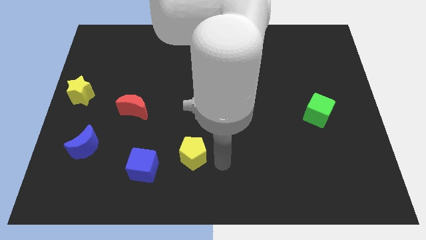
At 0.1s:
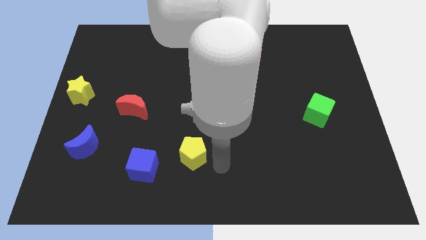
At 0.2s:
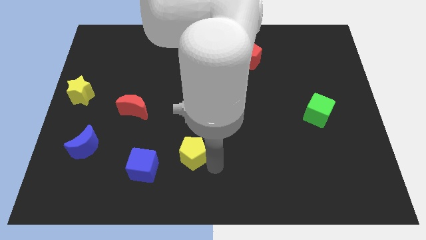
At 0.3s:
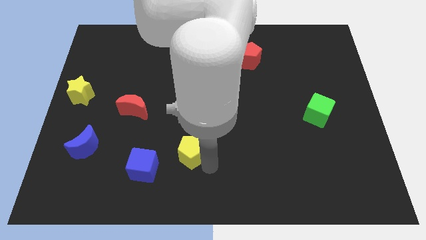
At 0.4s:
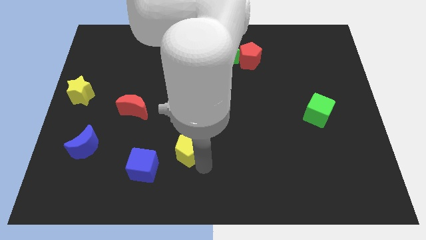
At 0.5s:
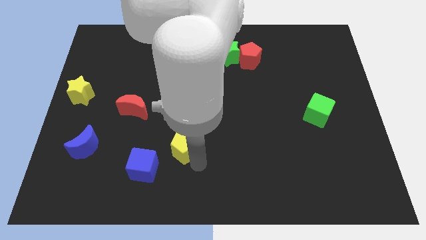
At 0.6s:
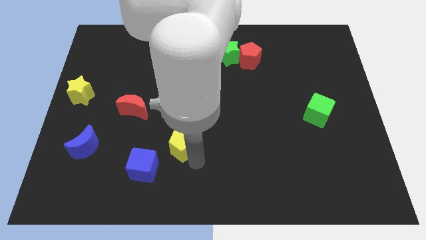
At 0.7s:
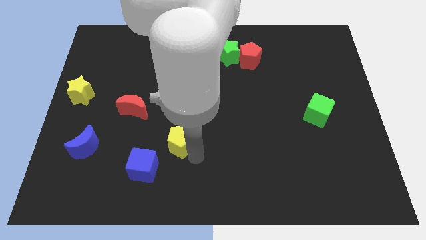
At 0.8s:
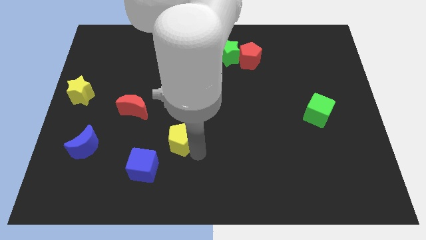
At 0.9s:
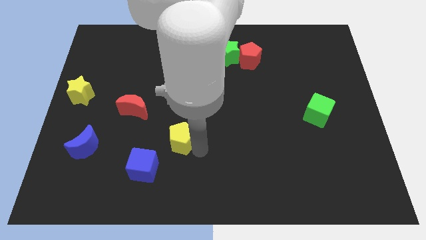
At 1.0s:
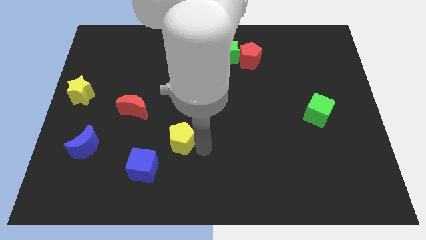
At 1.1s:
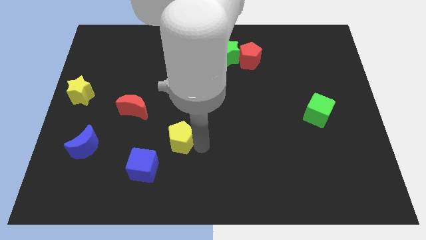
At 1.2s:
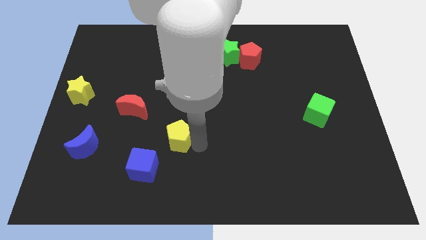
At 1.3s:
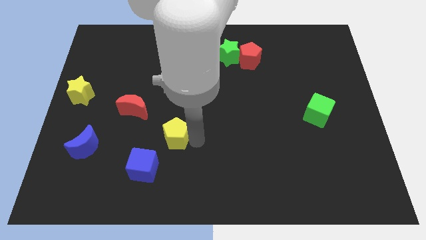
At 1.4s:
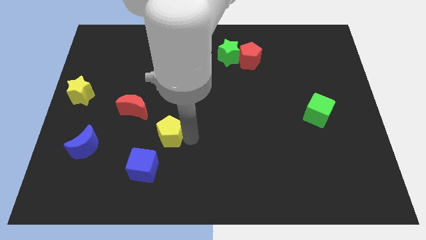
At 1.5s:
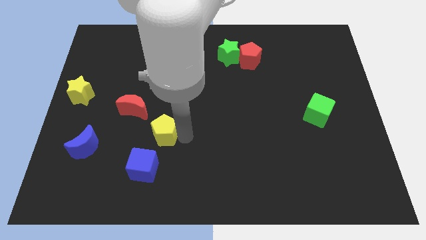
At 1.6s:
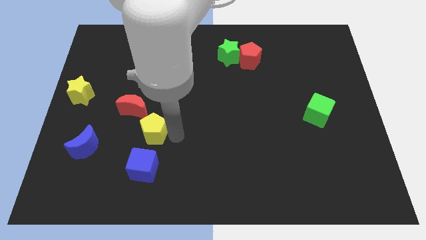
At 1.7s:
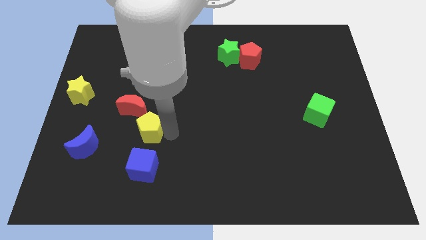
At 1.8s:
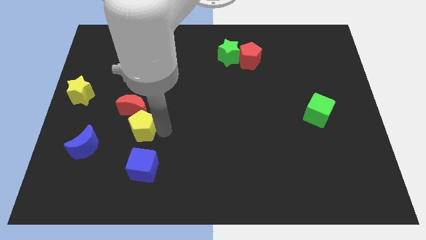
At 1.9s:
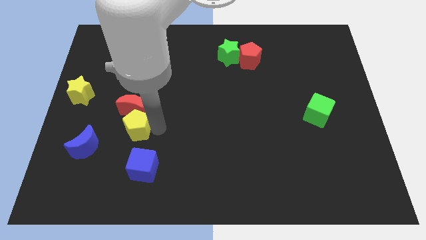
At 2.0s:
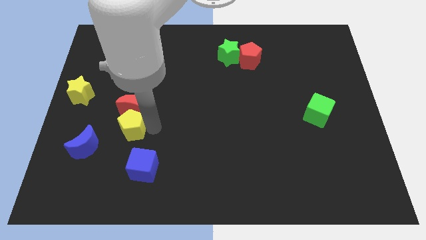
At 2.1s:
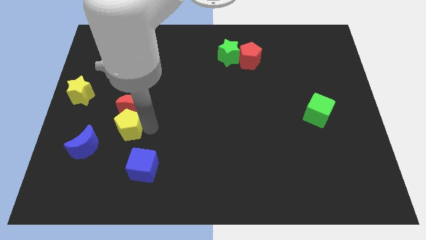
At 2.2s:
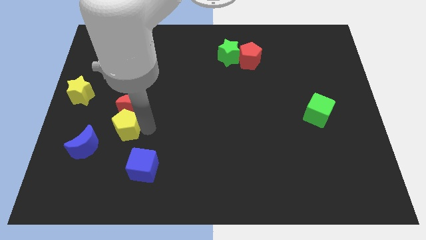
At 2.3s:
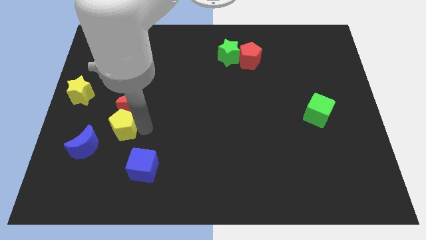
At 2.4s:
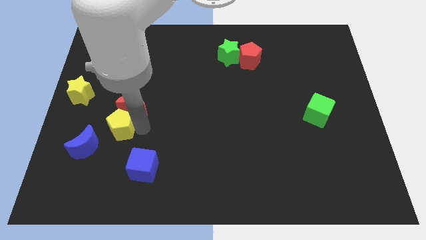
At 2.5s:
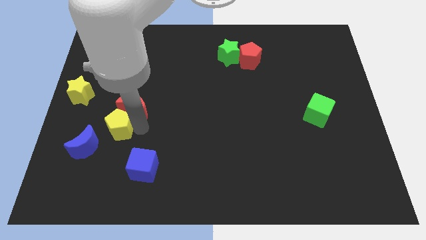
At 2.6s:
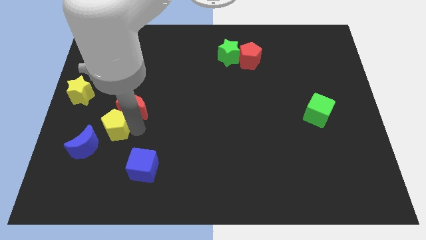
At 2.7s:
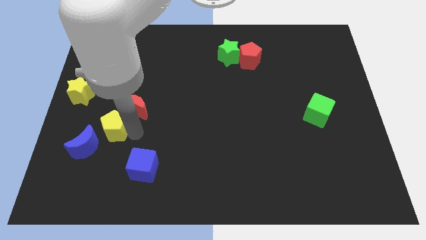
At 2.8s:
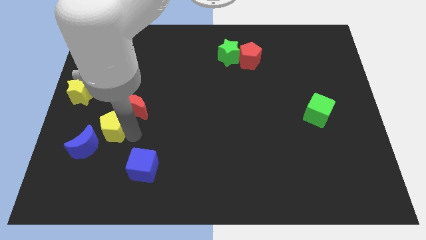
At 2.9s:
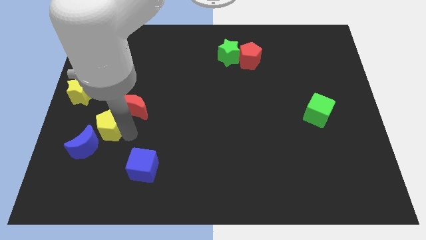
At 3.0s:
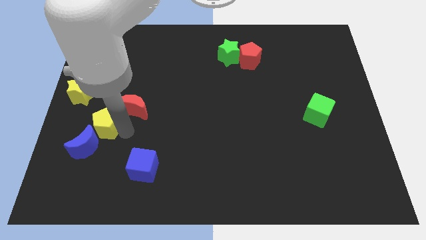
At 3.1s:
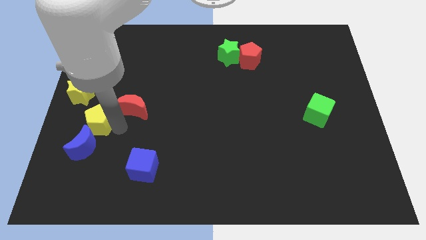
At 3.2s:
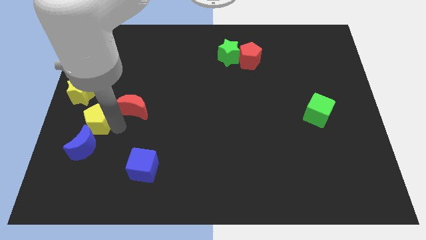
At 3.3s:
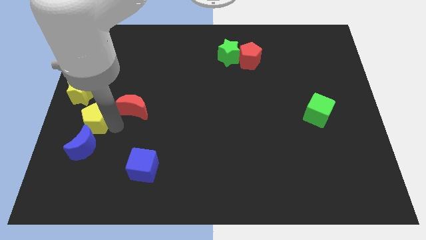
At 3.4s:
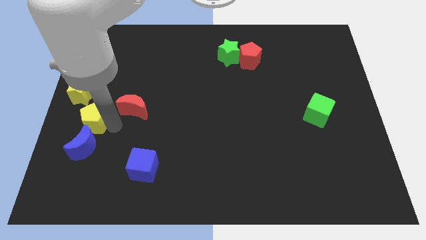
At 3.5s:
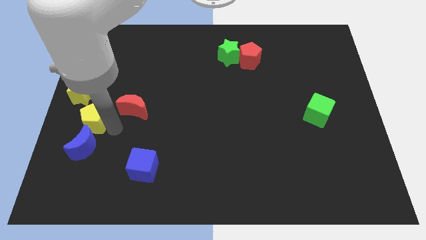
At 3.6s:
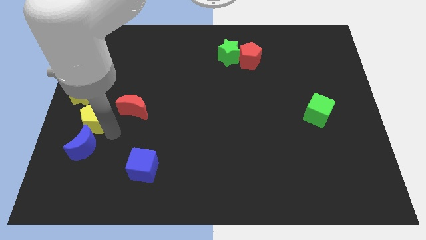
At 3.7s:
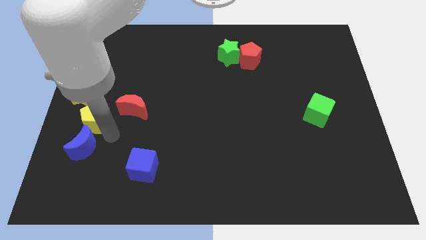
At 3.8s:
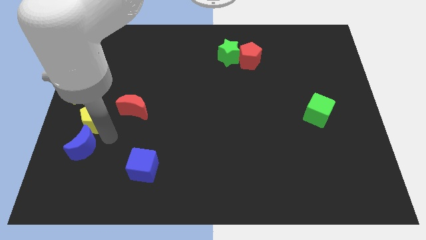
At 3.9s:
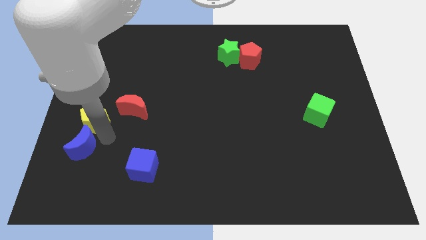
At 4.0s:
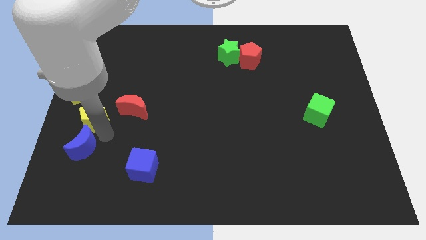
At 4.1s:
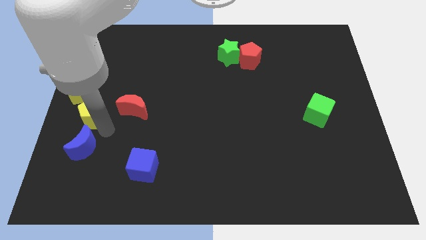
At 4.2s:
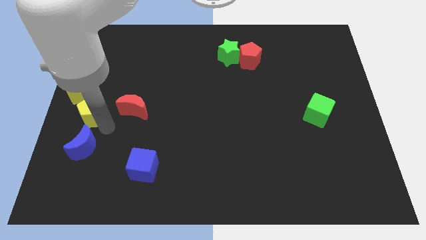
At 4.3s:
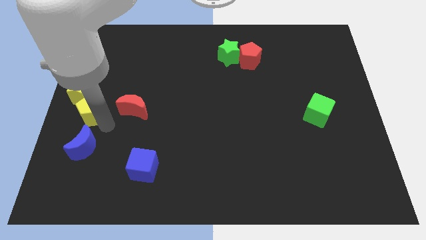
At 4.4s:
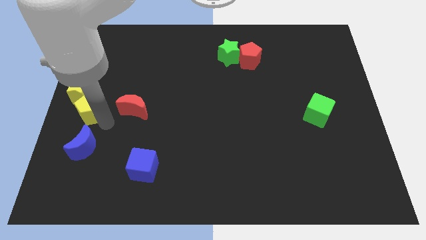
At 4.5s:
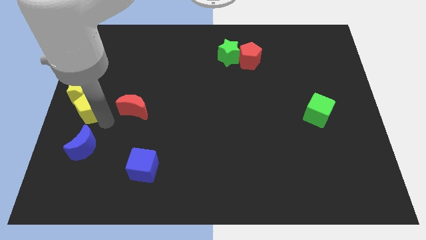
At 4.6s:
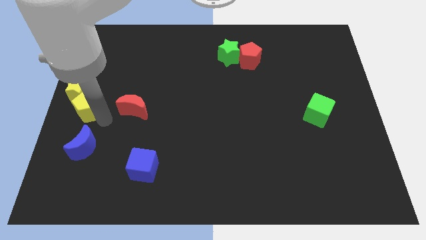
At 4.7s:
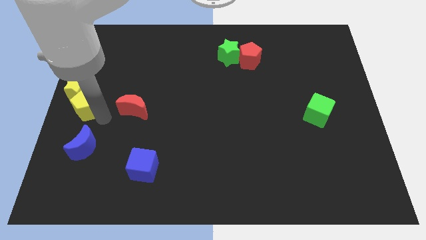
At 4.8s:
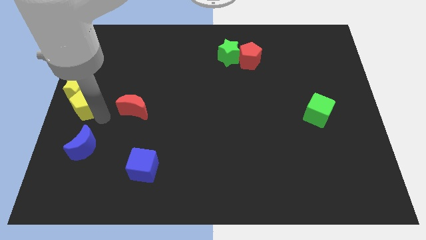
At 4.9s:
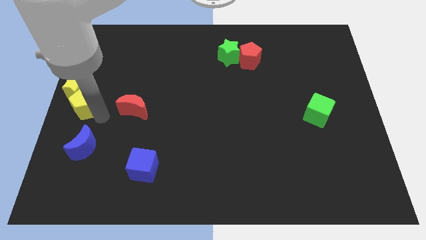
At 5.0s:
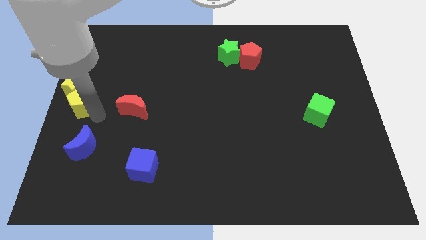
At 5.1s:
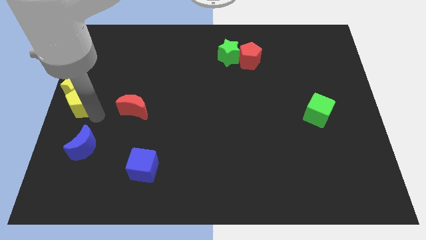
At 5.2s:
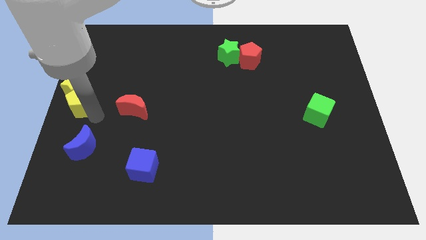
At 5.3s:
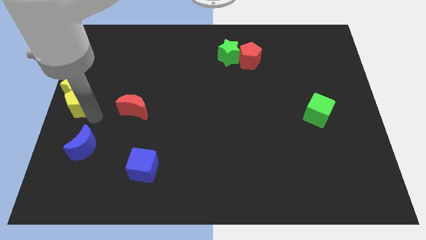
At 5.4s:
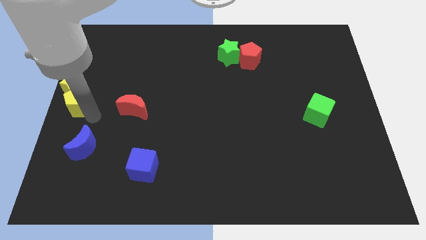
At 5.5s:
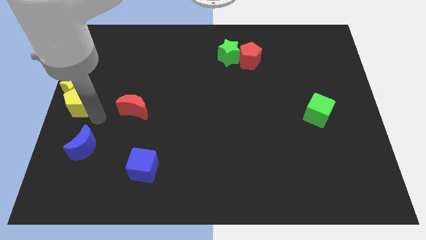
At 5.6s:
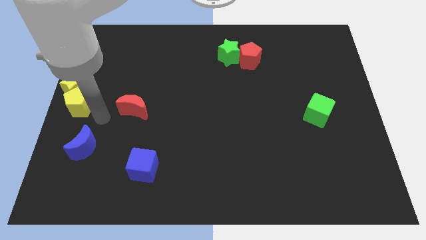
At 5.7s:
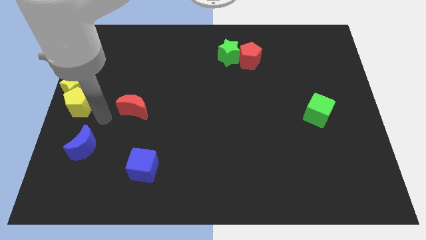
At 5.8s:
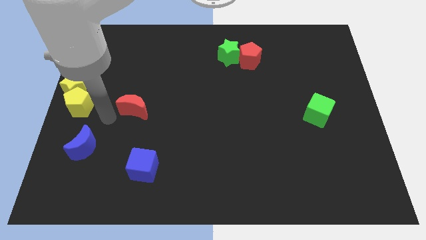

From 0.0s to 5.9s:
push the yellow pentagon into the yellow star

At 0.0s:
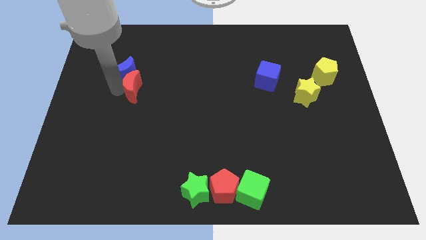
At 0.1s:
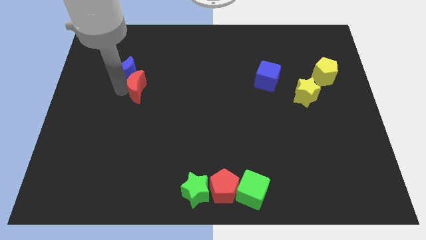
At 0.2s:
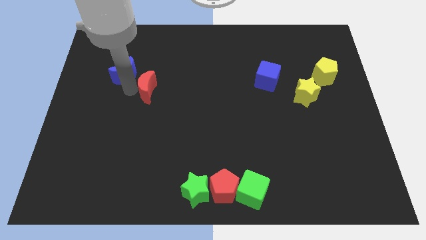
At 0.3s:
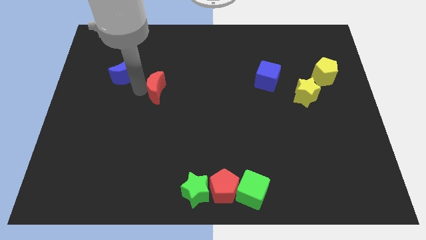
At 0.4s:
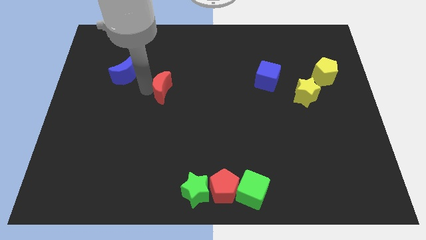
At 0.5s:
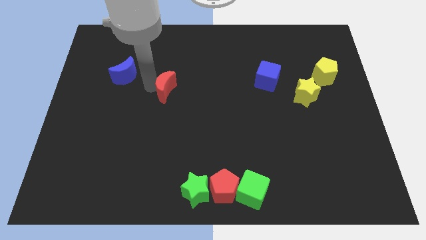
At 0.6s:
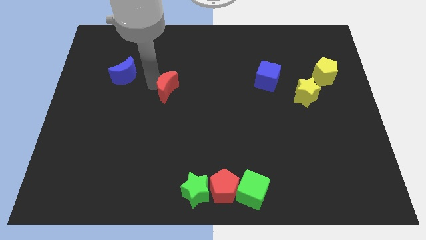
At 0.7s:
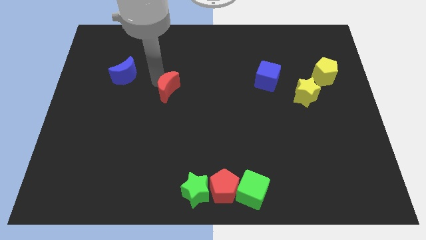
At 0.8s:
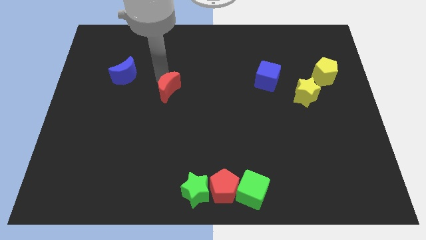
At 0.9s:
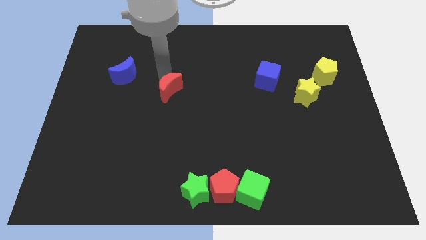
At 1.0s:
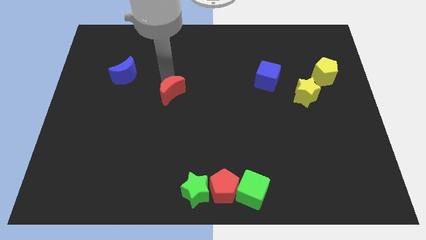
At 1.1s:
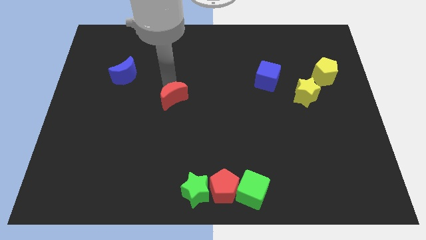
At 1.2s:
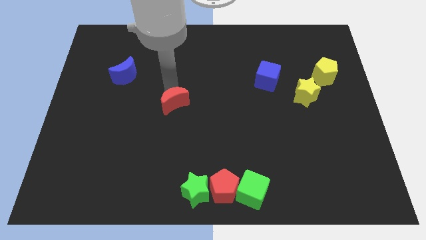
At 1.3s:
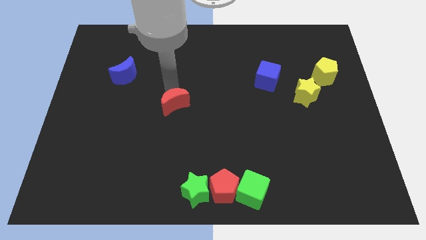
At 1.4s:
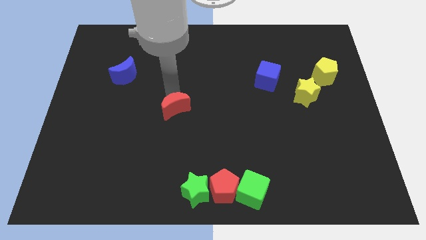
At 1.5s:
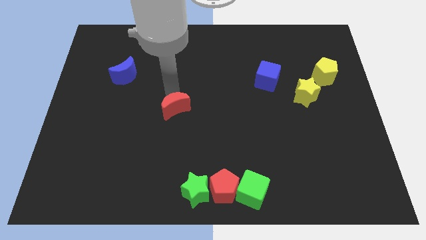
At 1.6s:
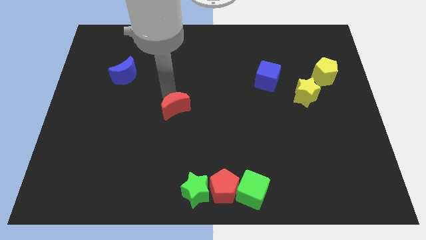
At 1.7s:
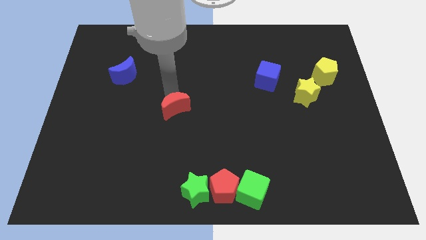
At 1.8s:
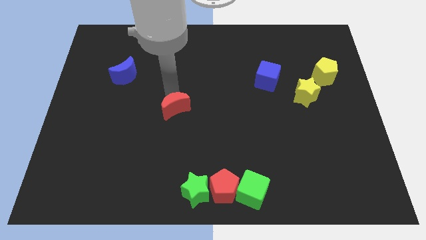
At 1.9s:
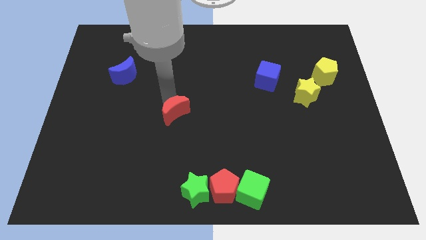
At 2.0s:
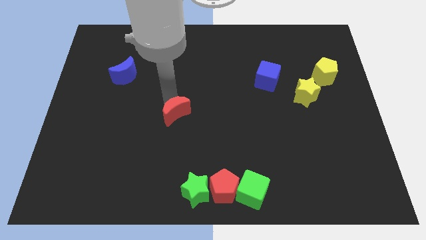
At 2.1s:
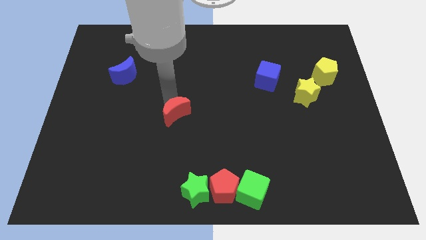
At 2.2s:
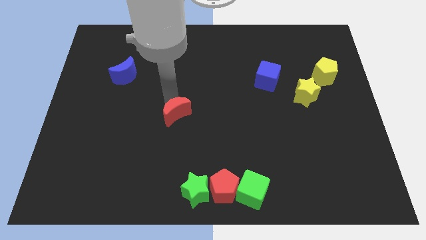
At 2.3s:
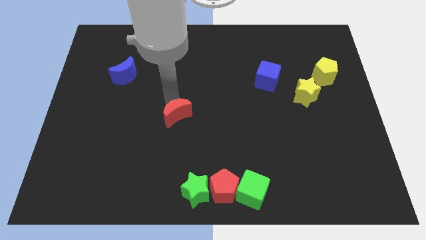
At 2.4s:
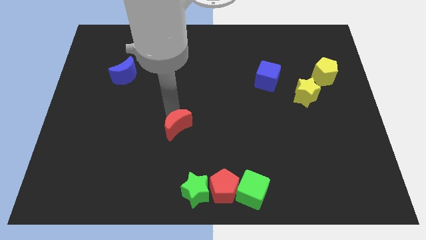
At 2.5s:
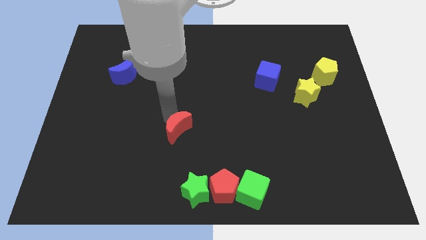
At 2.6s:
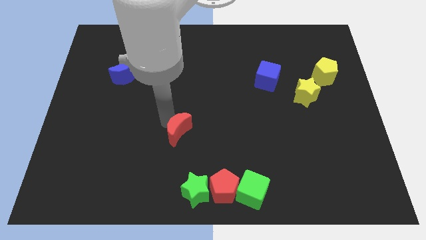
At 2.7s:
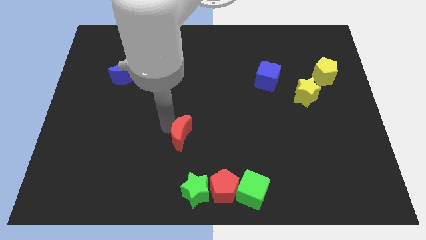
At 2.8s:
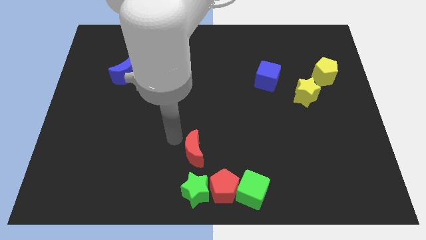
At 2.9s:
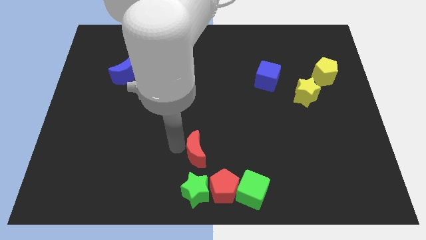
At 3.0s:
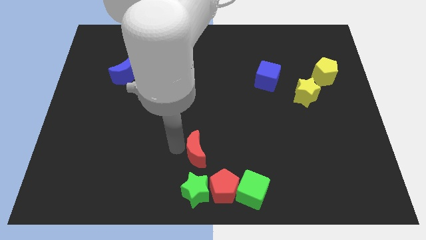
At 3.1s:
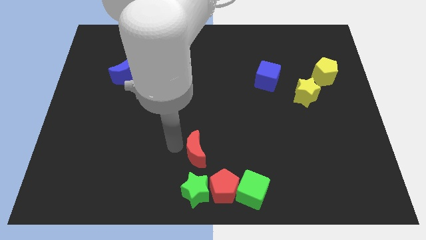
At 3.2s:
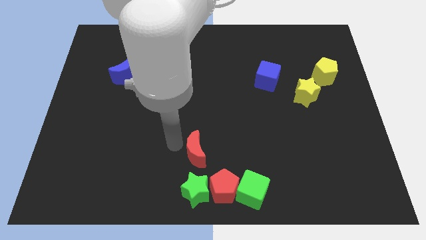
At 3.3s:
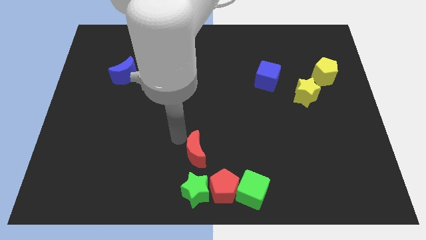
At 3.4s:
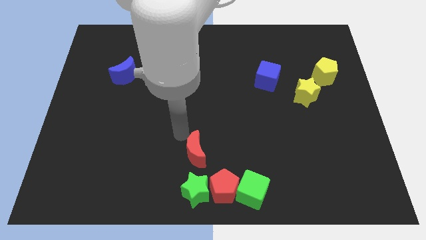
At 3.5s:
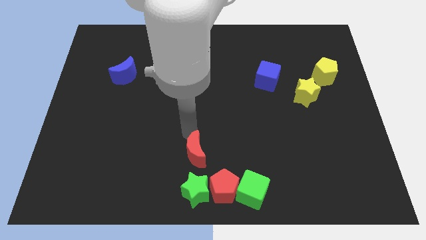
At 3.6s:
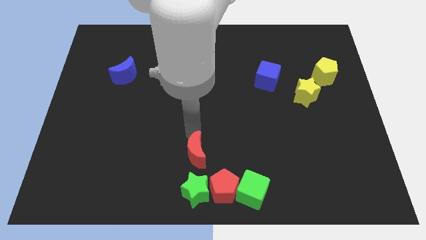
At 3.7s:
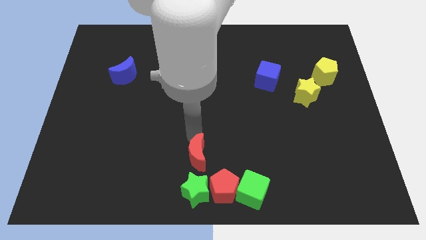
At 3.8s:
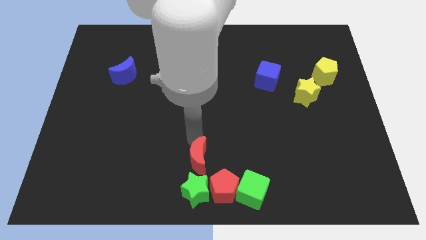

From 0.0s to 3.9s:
move the red crescent parallel to the green star
